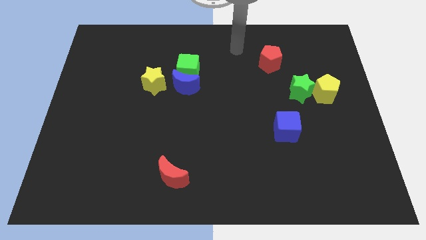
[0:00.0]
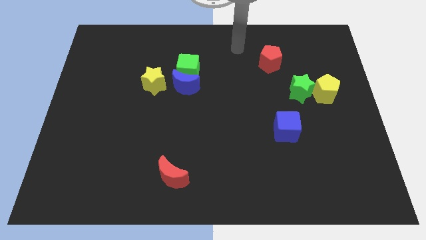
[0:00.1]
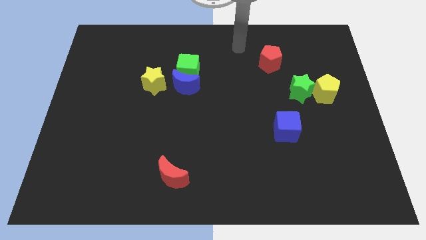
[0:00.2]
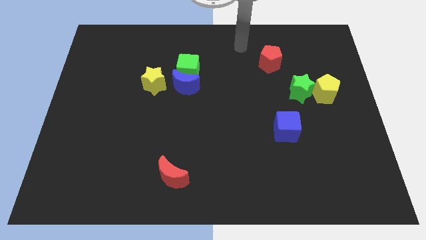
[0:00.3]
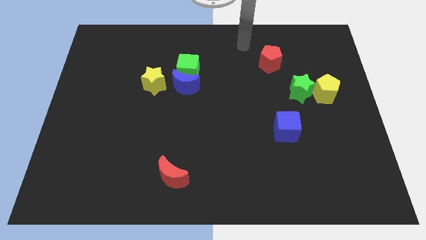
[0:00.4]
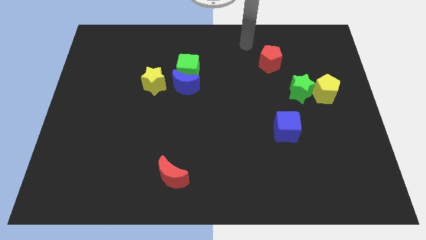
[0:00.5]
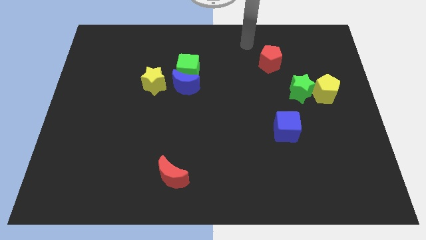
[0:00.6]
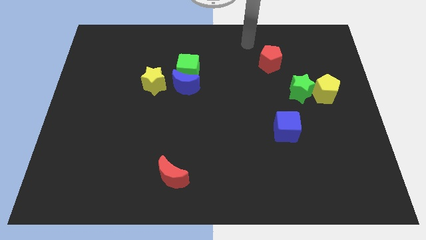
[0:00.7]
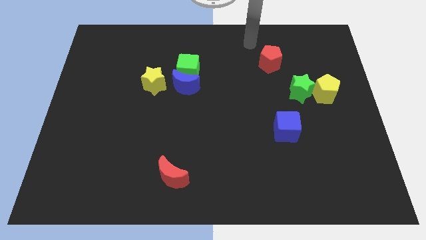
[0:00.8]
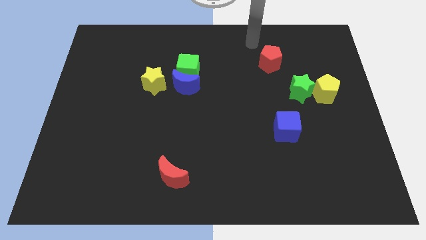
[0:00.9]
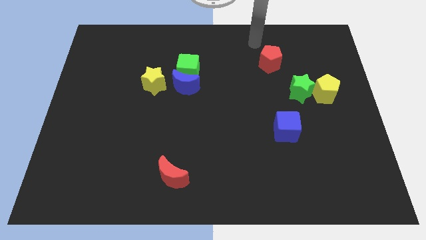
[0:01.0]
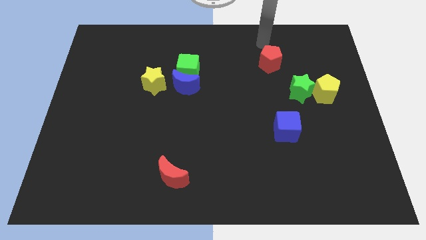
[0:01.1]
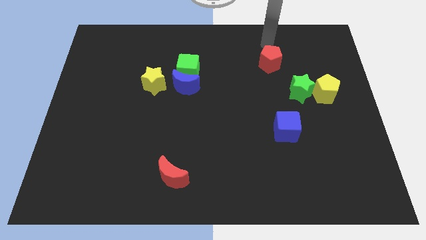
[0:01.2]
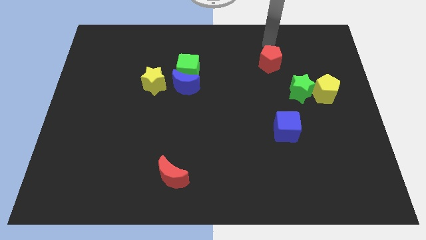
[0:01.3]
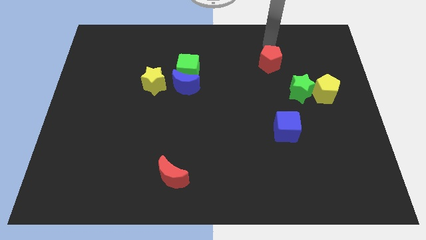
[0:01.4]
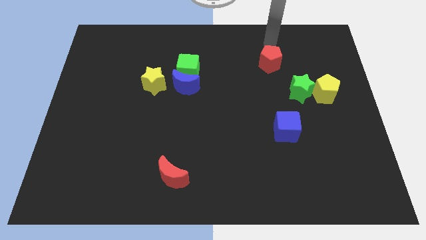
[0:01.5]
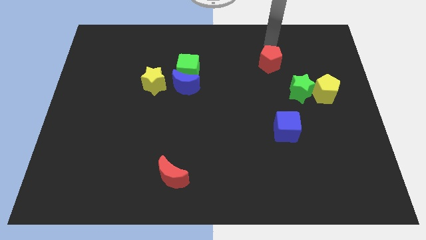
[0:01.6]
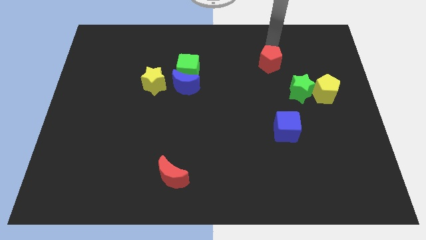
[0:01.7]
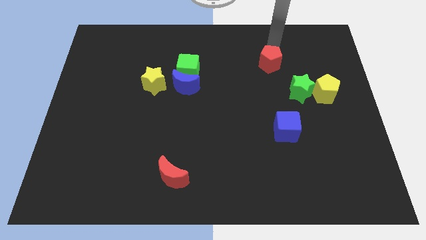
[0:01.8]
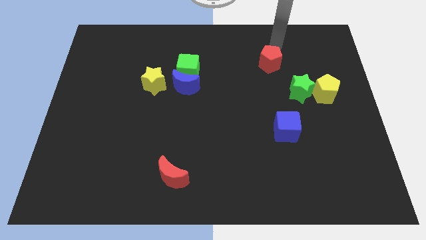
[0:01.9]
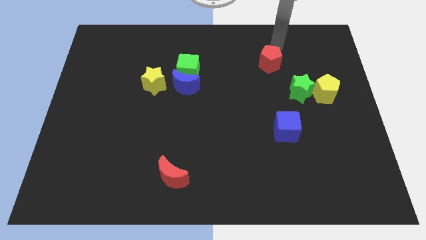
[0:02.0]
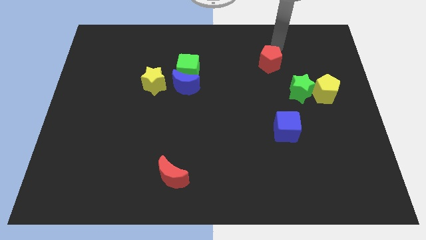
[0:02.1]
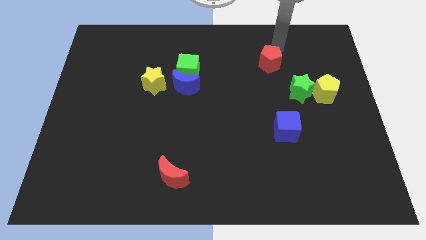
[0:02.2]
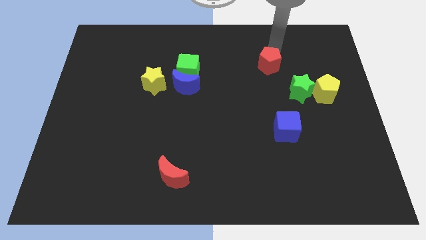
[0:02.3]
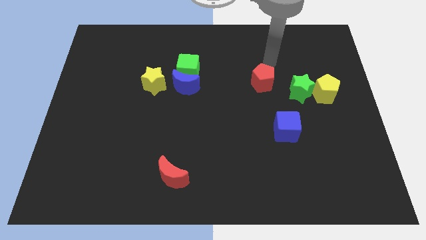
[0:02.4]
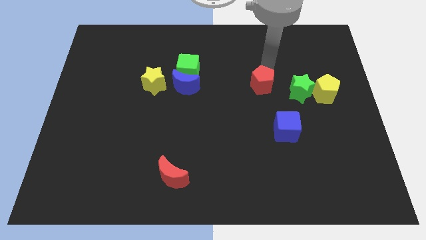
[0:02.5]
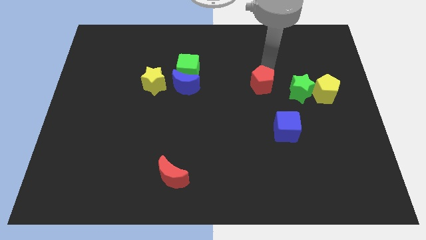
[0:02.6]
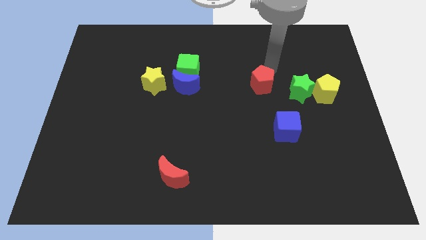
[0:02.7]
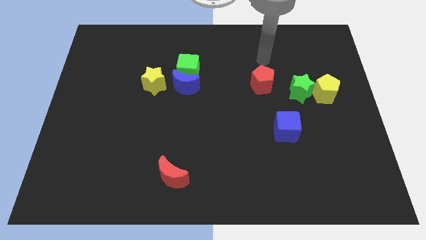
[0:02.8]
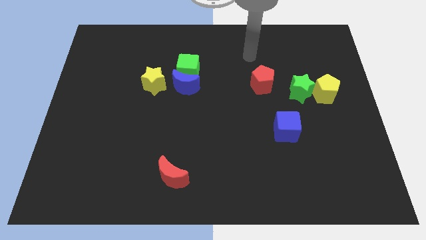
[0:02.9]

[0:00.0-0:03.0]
place the red pentagon to the left of the green star

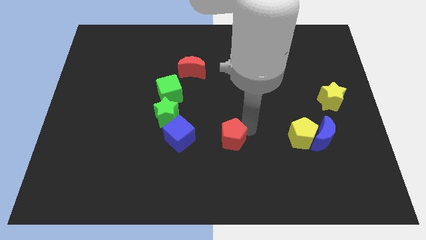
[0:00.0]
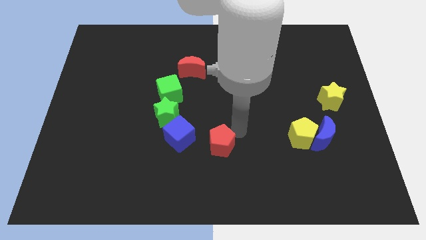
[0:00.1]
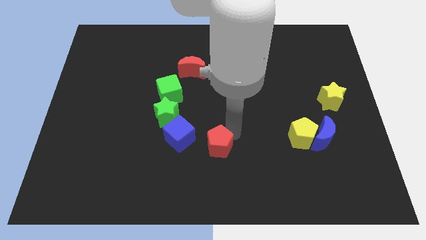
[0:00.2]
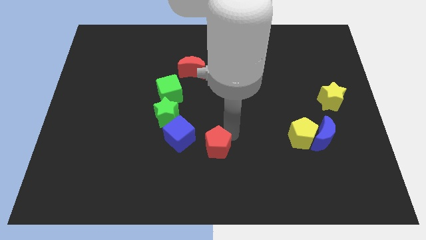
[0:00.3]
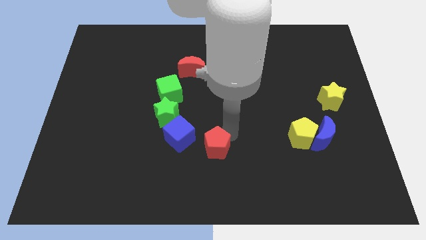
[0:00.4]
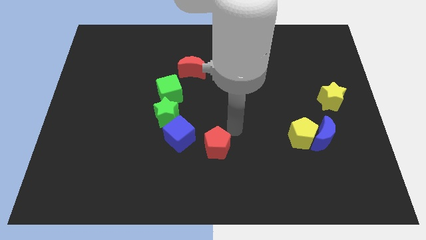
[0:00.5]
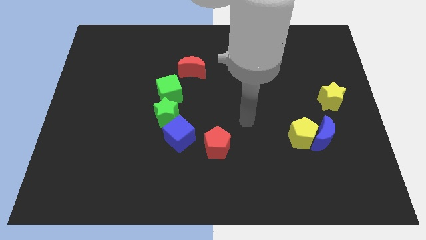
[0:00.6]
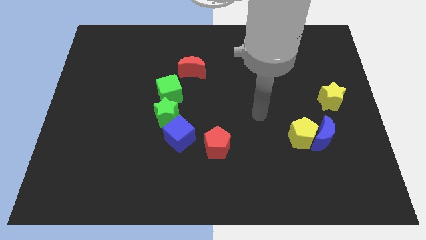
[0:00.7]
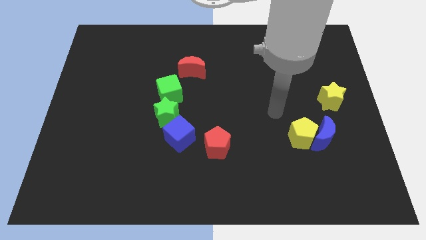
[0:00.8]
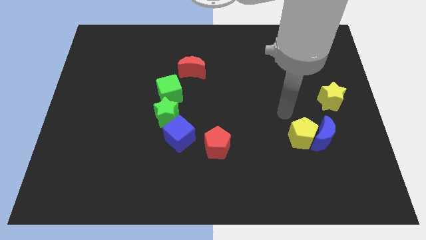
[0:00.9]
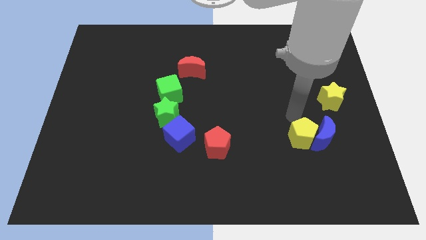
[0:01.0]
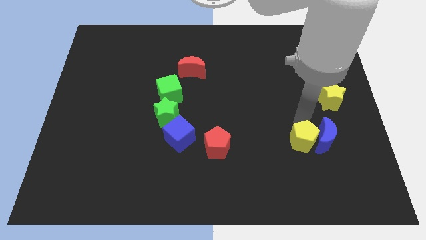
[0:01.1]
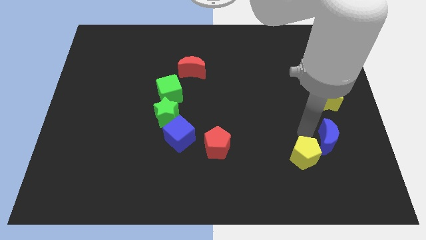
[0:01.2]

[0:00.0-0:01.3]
push the red pentagon to the right of the blue cube

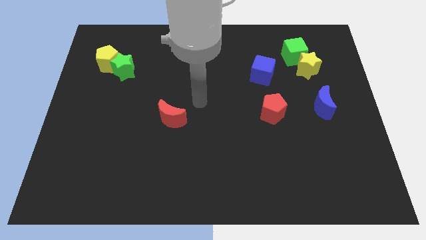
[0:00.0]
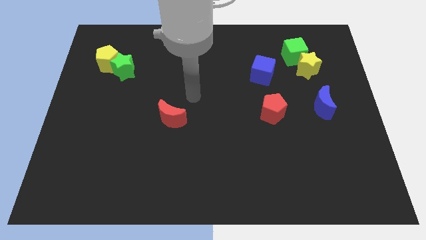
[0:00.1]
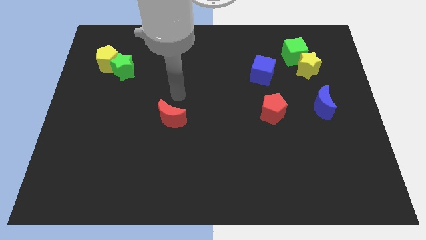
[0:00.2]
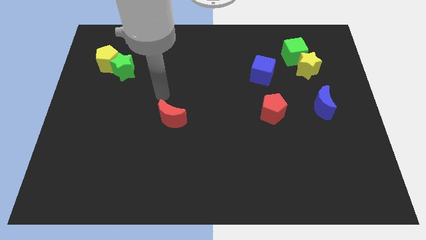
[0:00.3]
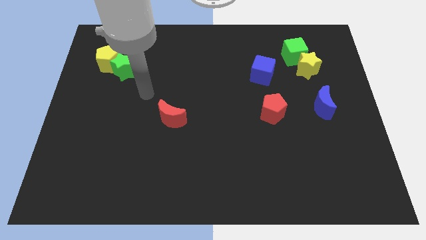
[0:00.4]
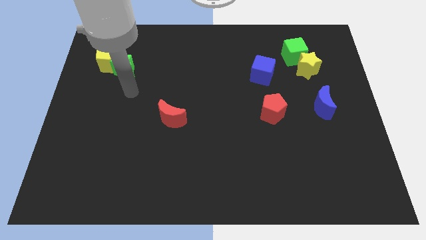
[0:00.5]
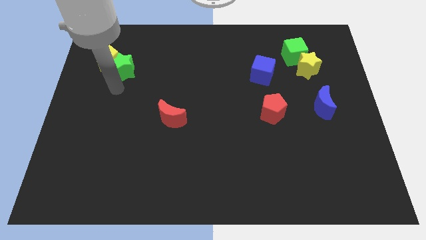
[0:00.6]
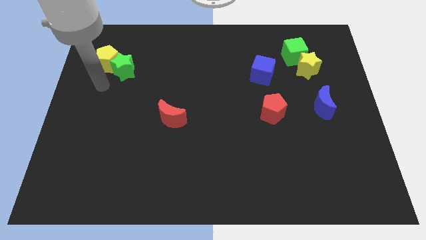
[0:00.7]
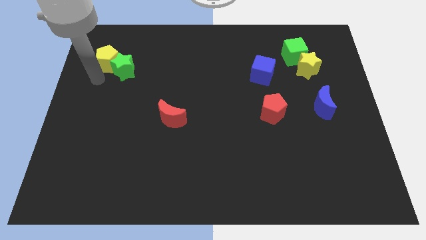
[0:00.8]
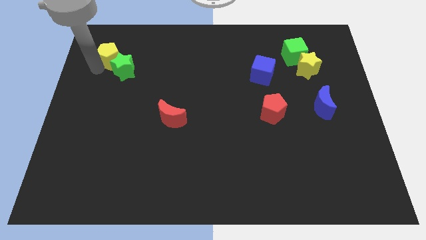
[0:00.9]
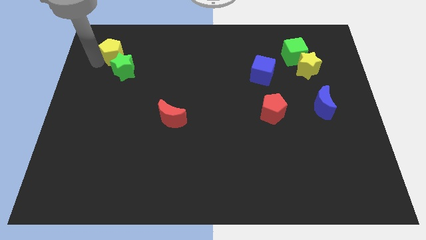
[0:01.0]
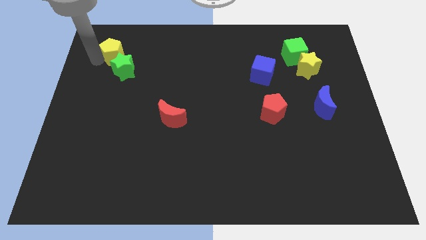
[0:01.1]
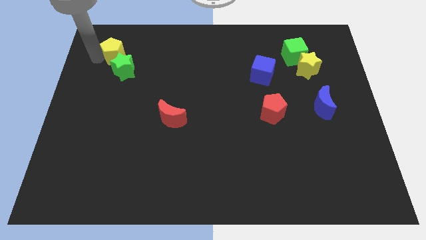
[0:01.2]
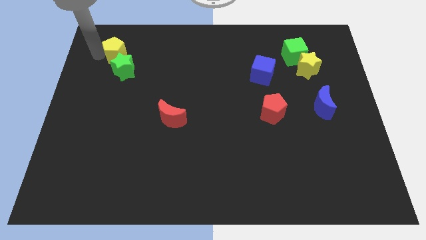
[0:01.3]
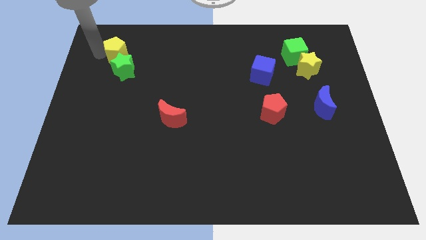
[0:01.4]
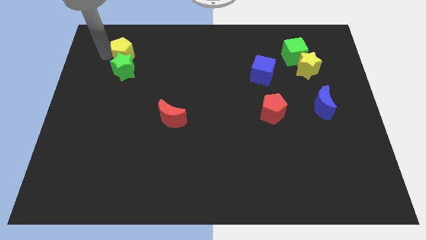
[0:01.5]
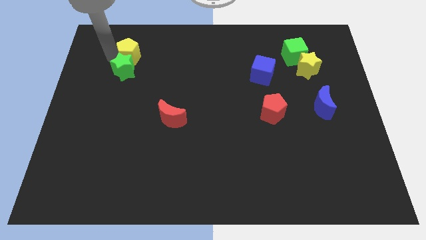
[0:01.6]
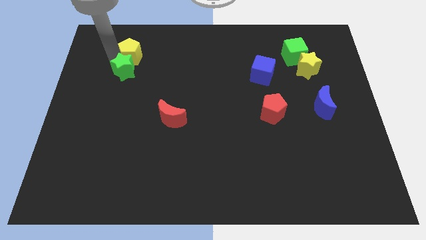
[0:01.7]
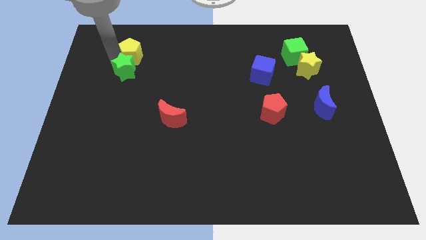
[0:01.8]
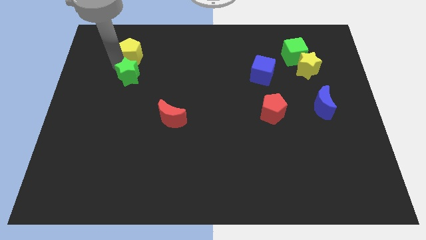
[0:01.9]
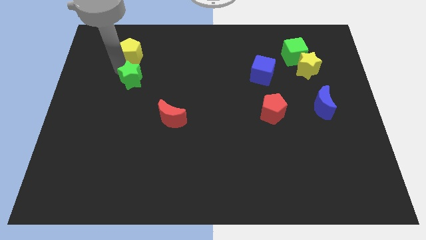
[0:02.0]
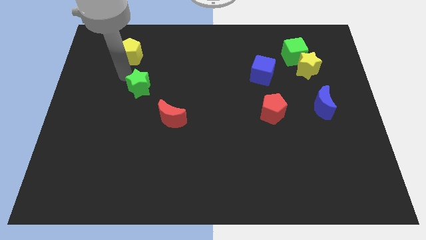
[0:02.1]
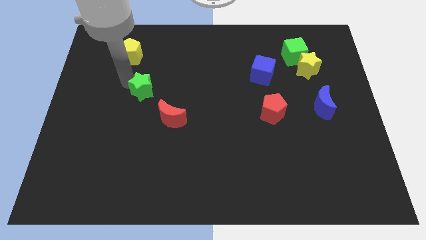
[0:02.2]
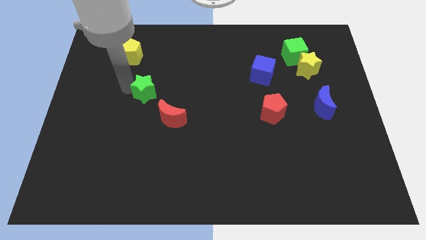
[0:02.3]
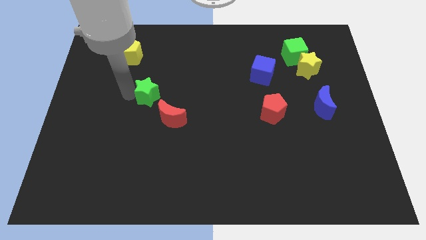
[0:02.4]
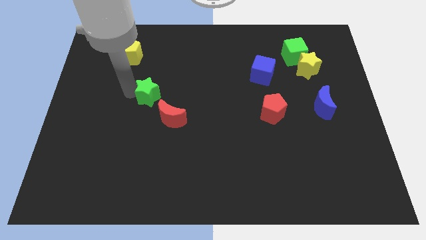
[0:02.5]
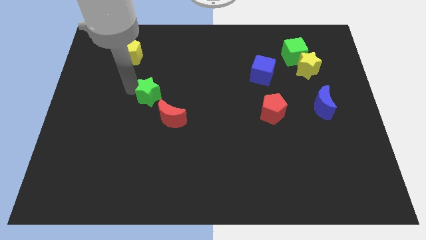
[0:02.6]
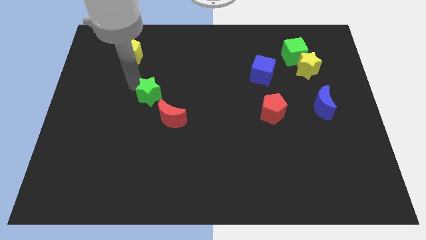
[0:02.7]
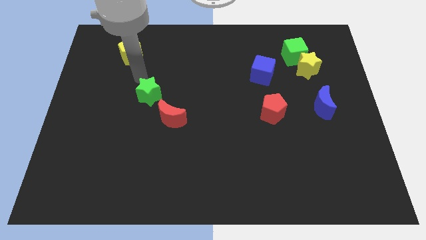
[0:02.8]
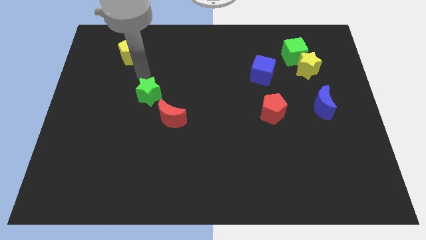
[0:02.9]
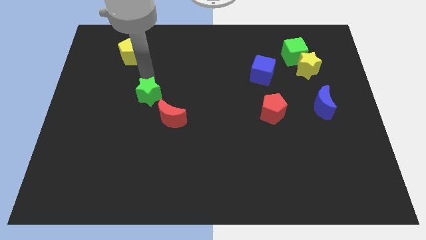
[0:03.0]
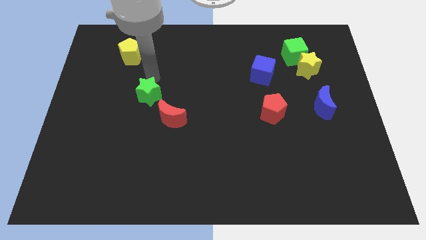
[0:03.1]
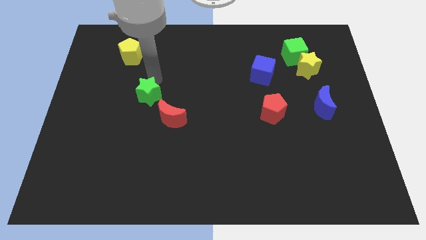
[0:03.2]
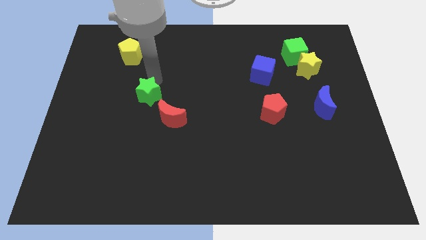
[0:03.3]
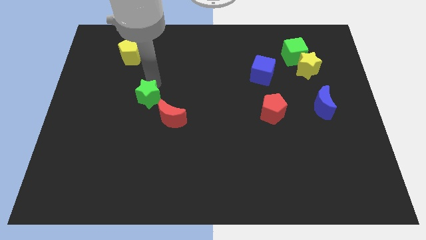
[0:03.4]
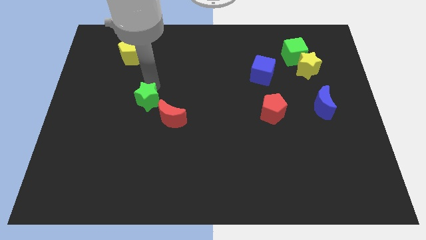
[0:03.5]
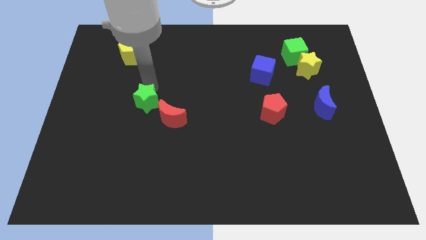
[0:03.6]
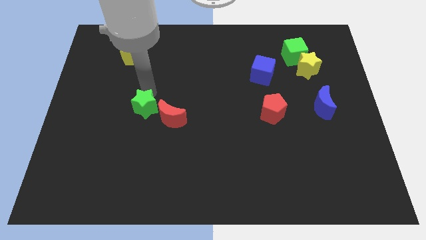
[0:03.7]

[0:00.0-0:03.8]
separate green star from yellow pentagon

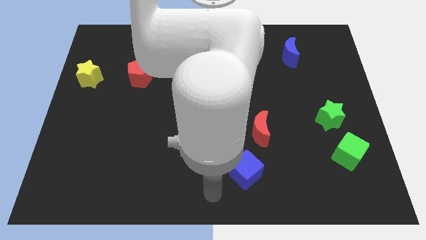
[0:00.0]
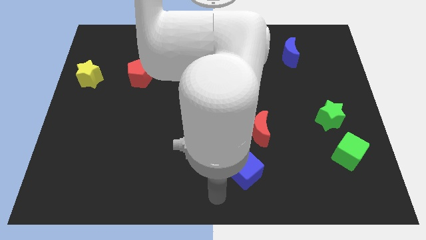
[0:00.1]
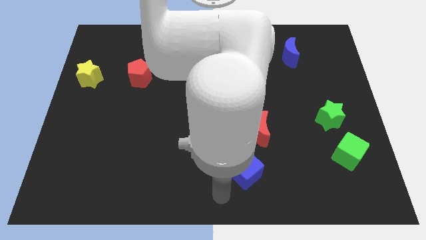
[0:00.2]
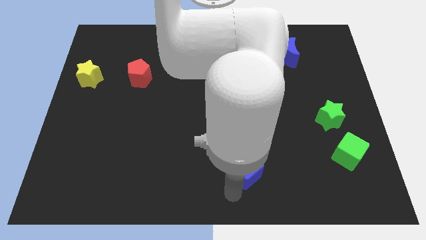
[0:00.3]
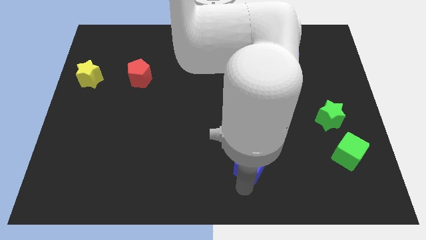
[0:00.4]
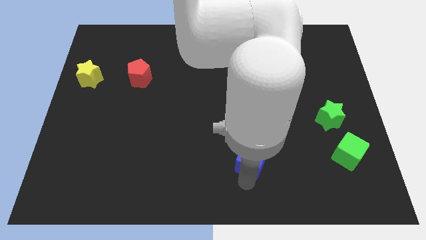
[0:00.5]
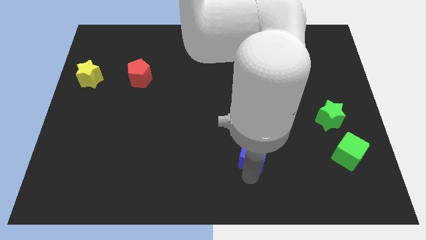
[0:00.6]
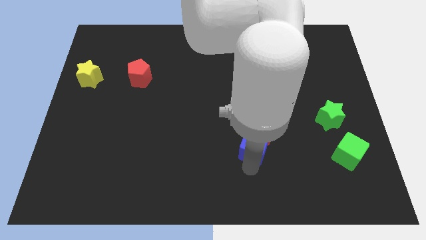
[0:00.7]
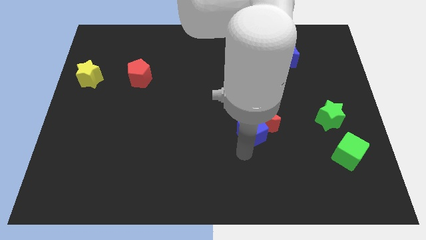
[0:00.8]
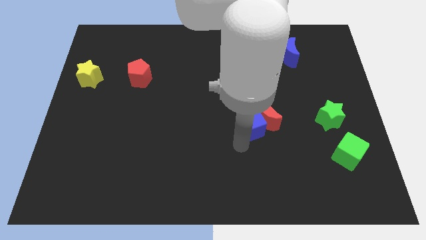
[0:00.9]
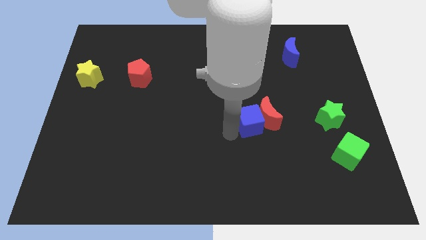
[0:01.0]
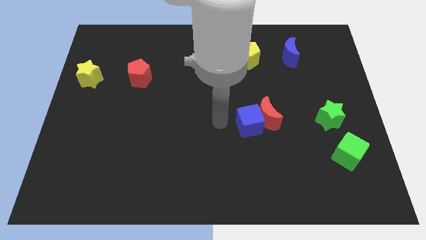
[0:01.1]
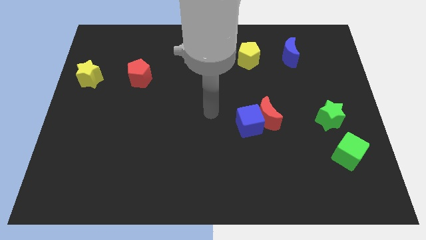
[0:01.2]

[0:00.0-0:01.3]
push the blue cube into the red crescent
